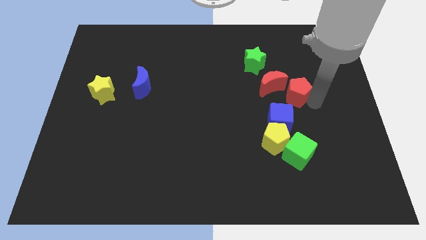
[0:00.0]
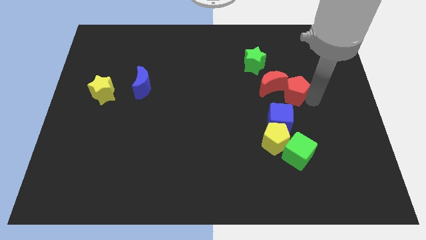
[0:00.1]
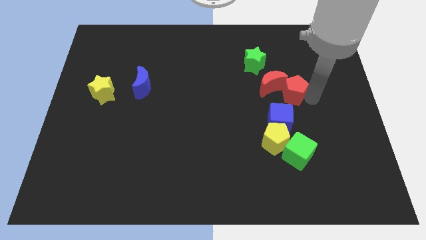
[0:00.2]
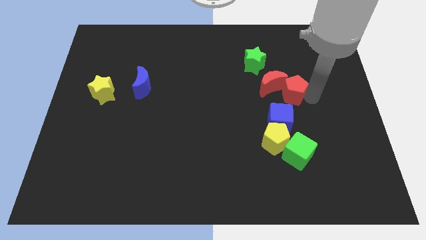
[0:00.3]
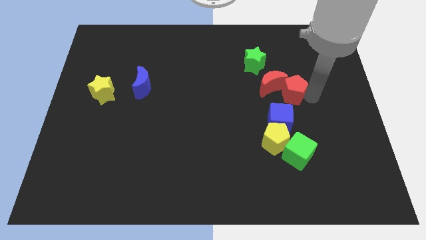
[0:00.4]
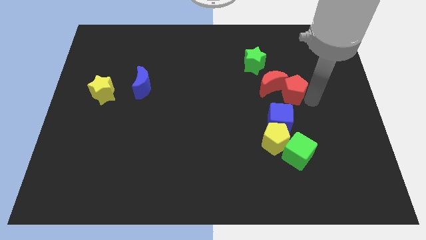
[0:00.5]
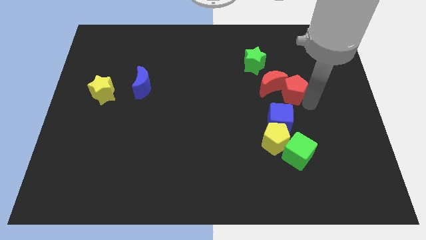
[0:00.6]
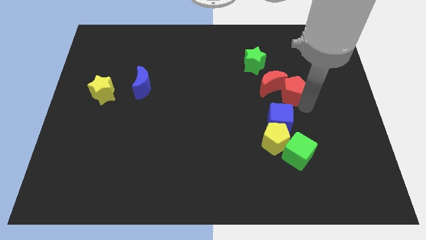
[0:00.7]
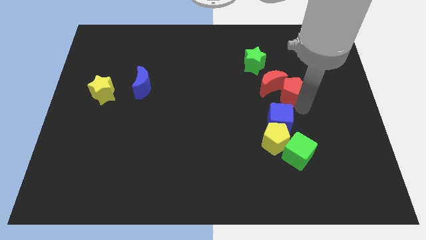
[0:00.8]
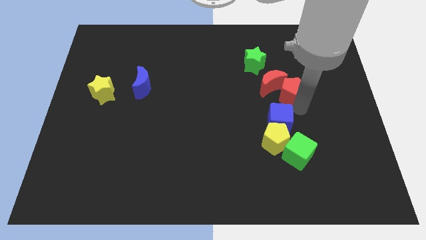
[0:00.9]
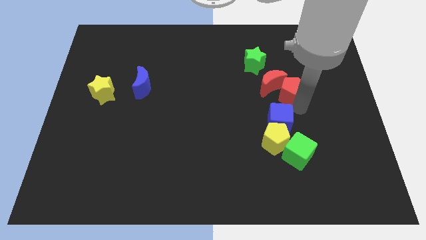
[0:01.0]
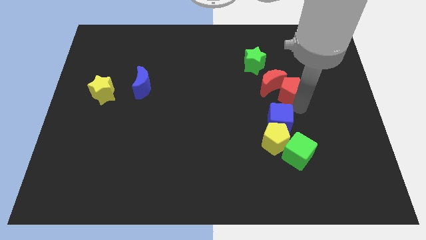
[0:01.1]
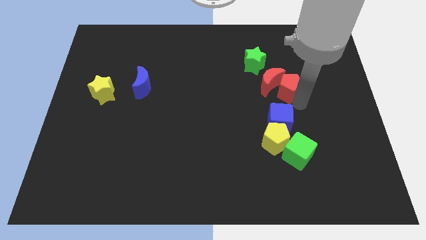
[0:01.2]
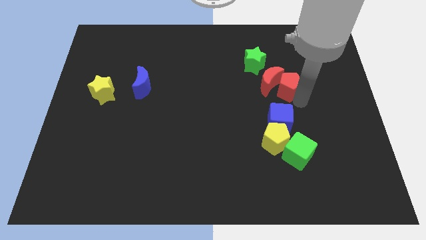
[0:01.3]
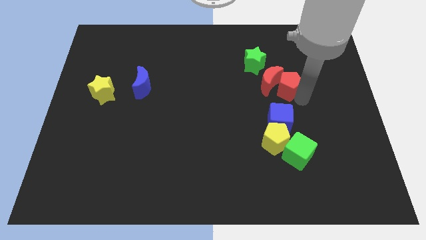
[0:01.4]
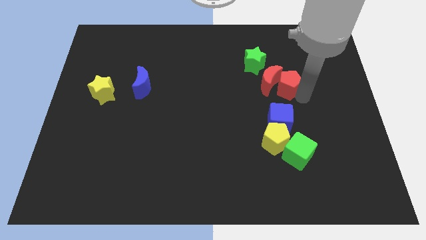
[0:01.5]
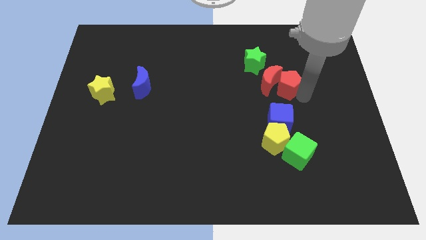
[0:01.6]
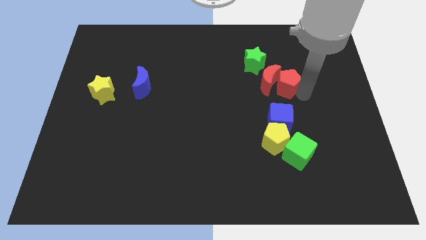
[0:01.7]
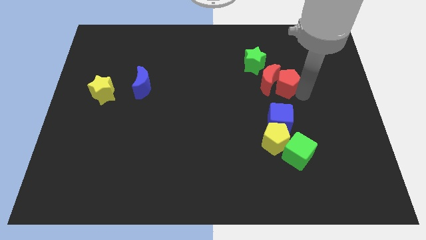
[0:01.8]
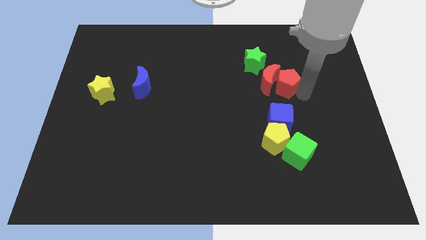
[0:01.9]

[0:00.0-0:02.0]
move the red pentagon into the red crescent

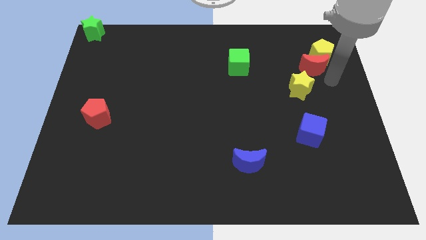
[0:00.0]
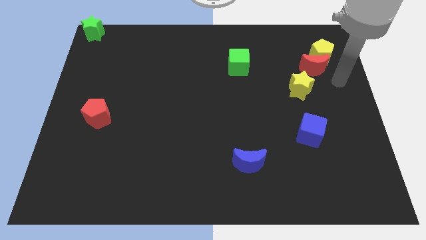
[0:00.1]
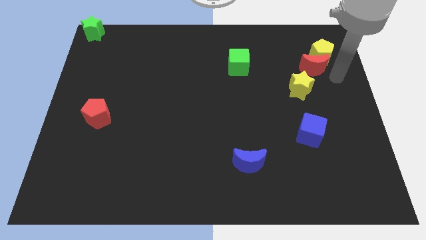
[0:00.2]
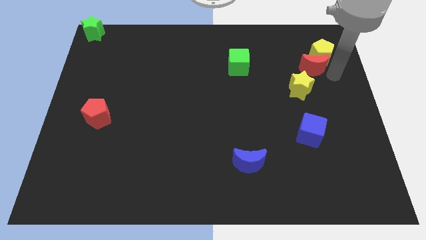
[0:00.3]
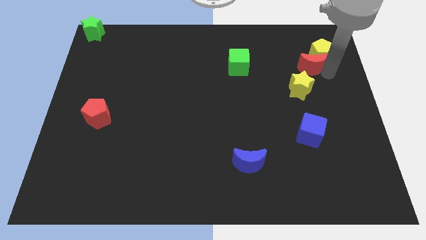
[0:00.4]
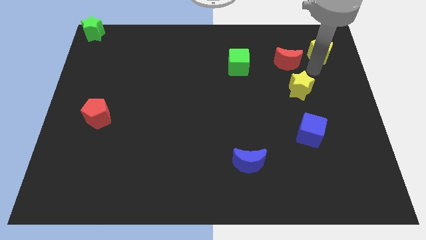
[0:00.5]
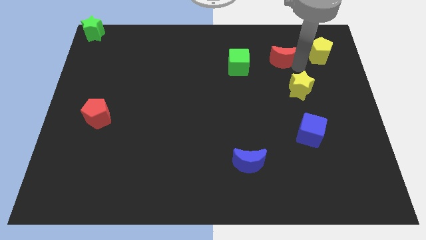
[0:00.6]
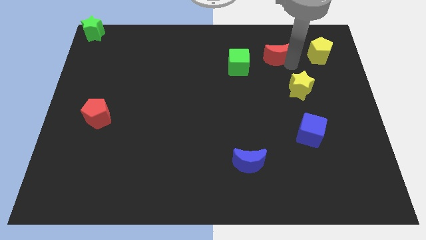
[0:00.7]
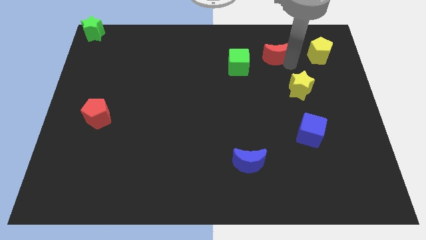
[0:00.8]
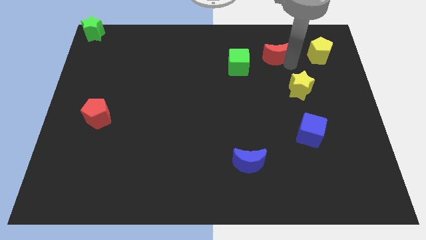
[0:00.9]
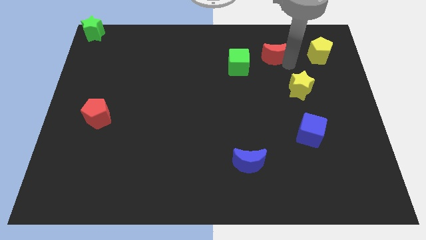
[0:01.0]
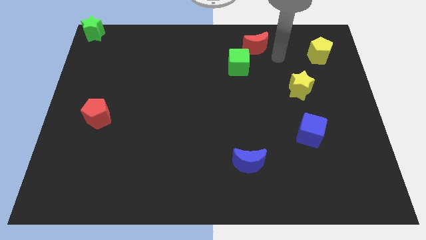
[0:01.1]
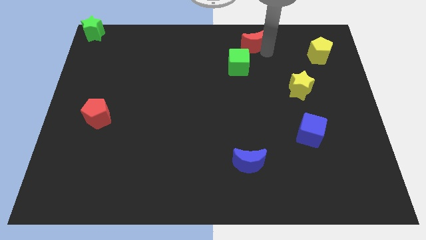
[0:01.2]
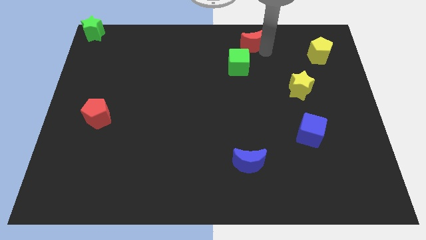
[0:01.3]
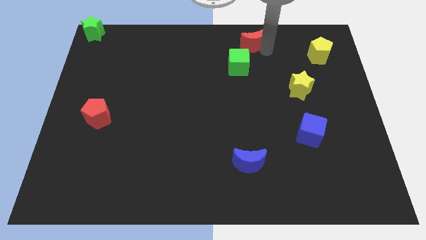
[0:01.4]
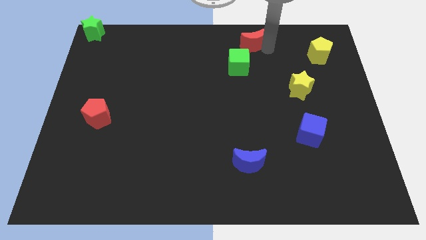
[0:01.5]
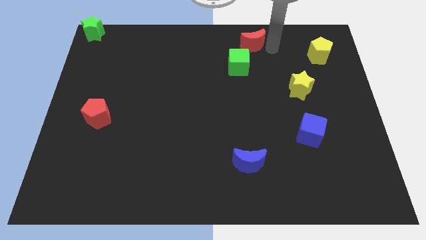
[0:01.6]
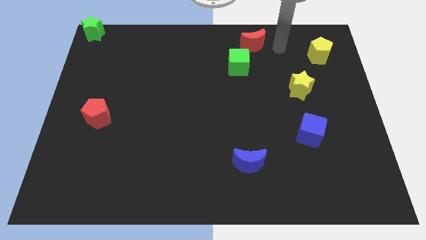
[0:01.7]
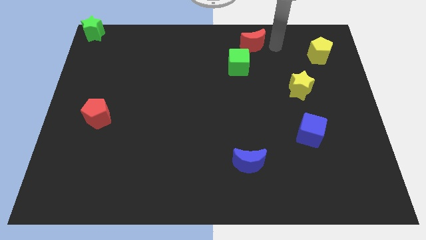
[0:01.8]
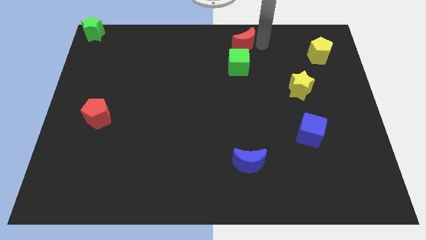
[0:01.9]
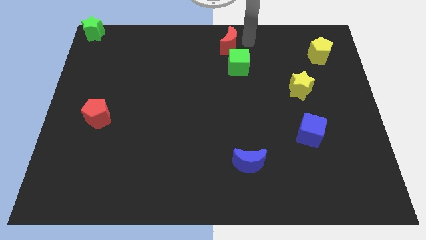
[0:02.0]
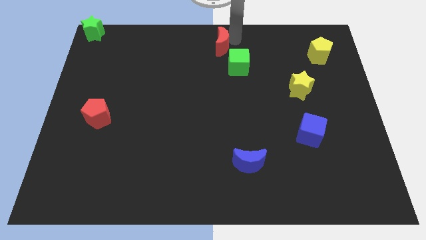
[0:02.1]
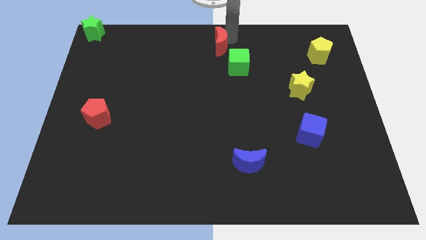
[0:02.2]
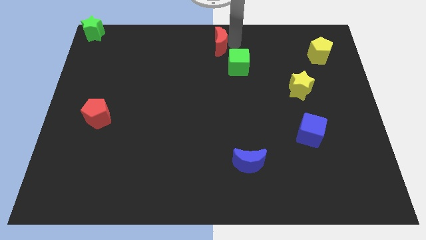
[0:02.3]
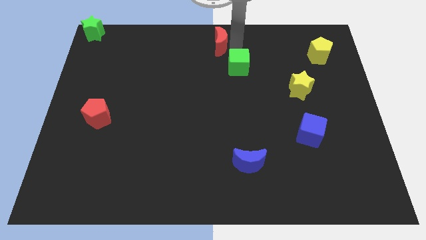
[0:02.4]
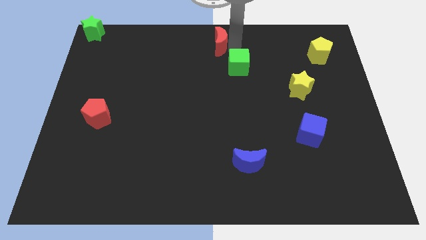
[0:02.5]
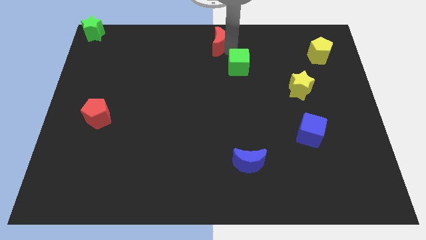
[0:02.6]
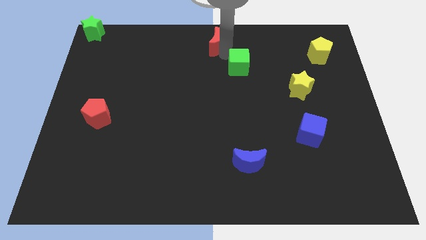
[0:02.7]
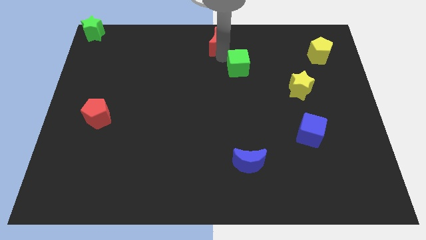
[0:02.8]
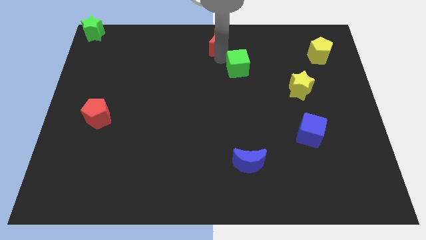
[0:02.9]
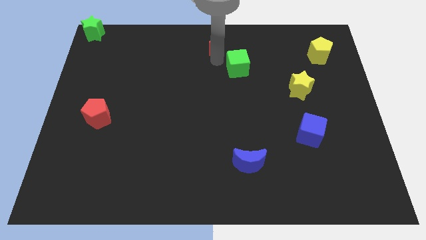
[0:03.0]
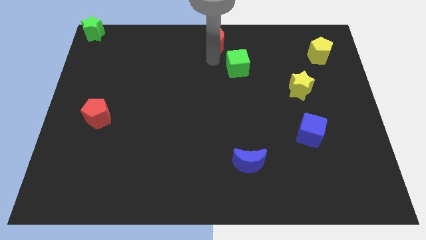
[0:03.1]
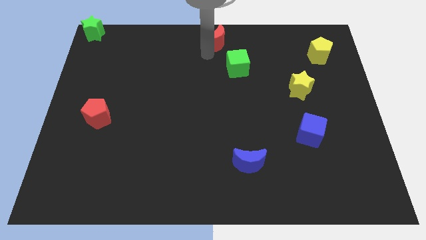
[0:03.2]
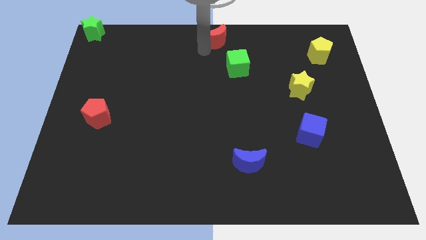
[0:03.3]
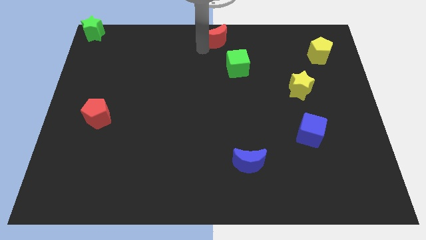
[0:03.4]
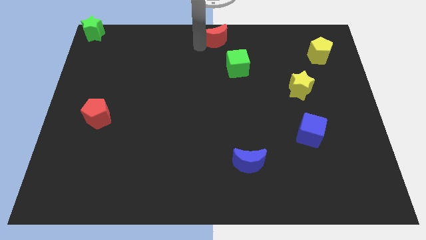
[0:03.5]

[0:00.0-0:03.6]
separate the red moon from the yellow blocks

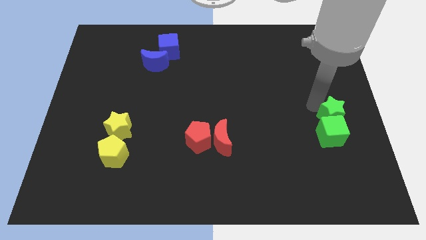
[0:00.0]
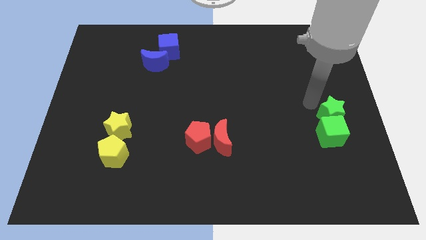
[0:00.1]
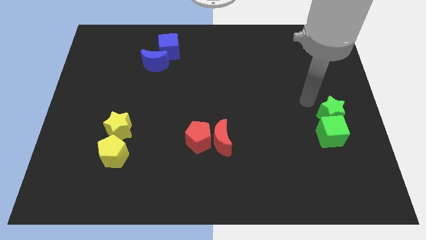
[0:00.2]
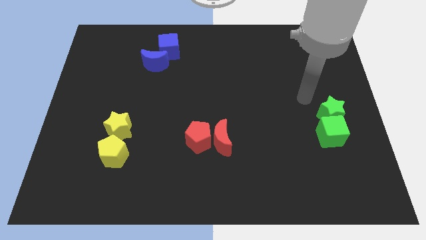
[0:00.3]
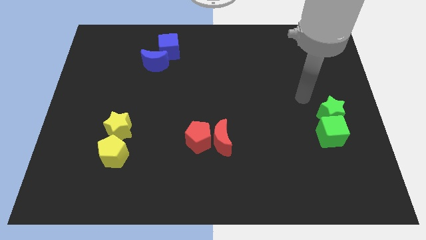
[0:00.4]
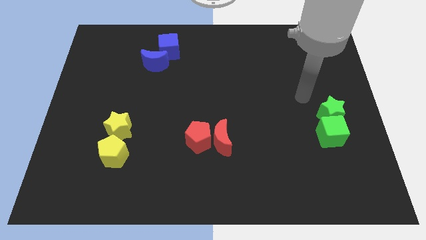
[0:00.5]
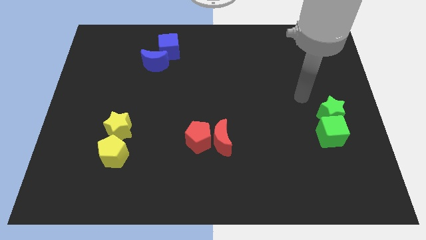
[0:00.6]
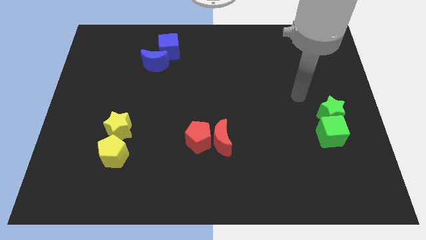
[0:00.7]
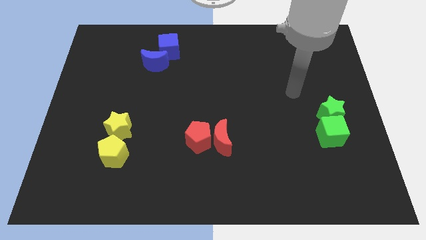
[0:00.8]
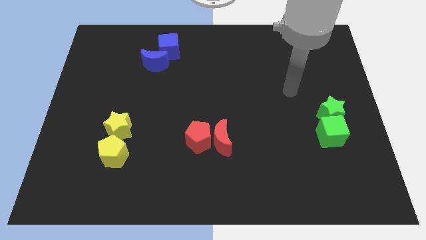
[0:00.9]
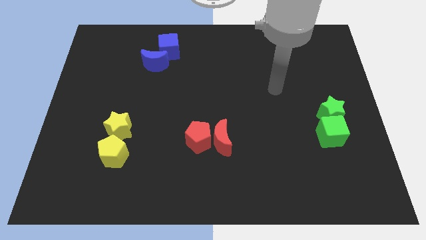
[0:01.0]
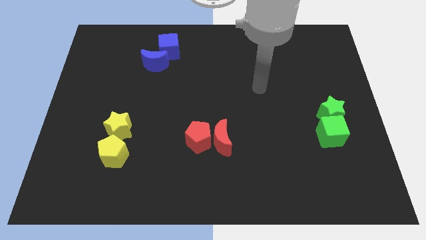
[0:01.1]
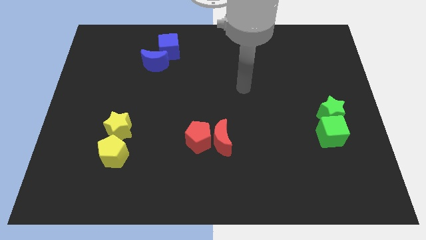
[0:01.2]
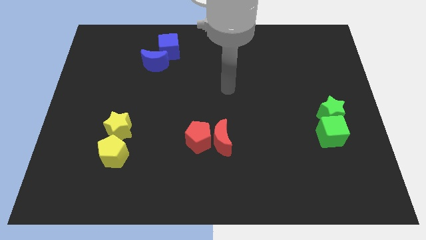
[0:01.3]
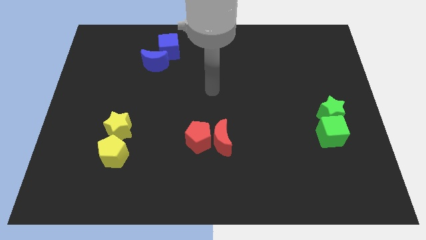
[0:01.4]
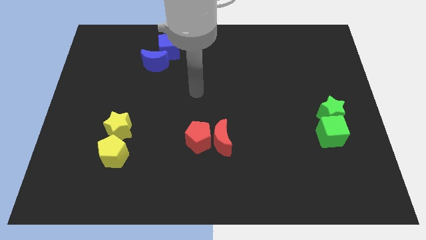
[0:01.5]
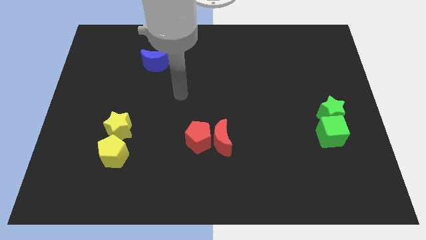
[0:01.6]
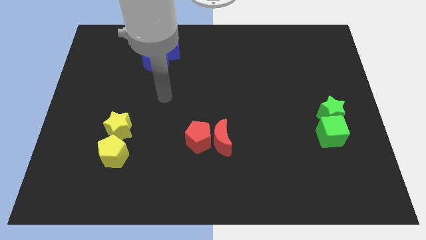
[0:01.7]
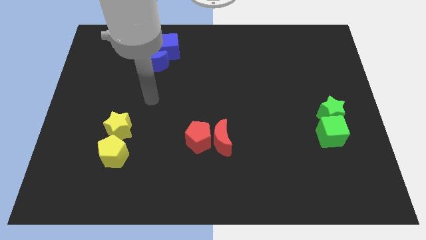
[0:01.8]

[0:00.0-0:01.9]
move your arm towards the left side of the board

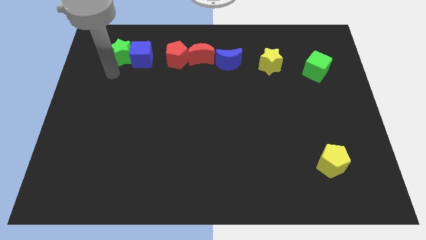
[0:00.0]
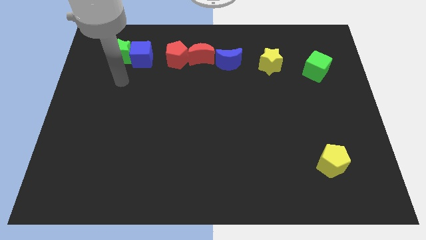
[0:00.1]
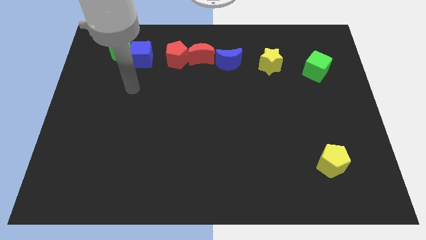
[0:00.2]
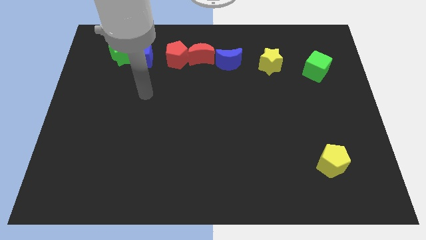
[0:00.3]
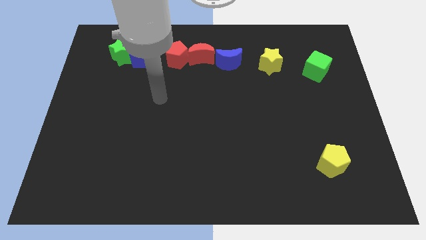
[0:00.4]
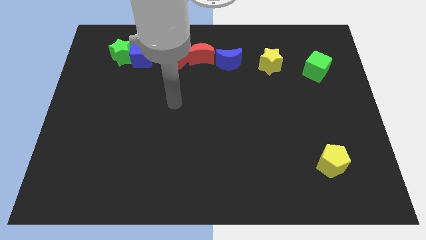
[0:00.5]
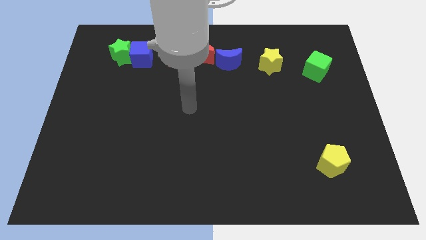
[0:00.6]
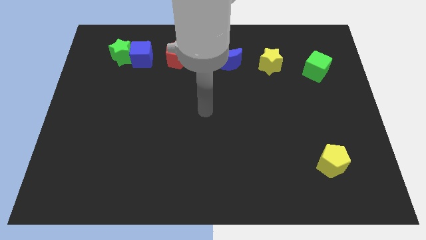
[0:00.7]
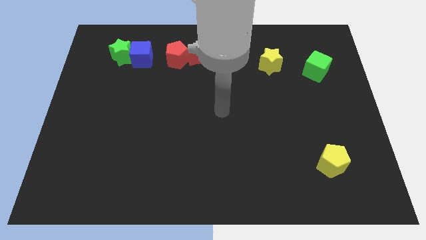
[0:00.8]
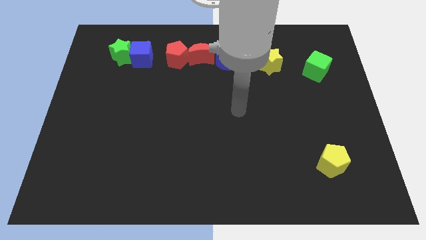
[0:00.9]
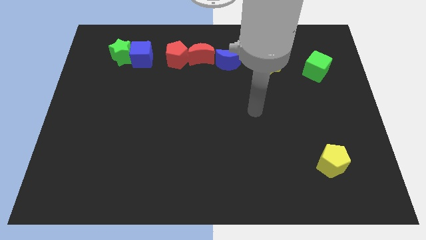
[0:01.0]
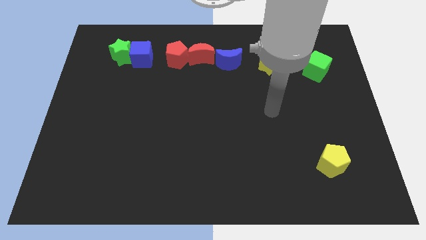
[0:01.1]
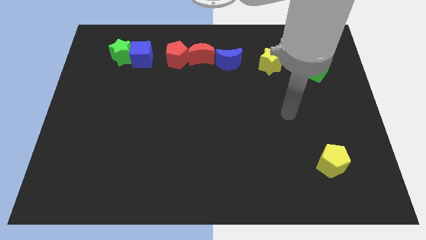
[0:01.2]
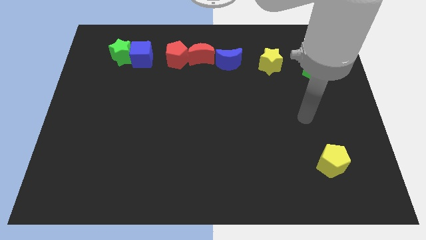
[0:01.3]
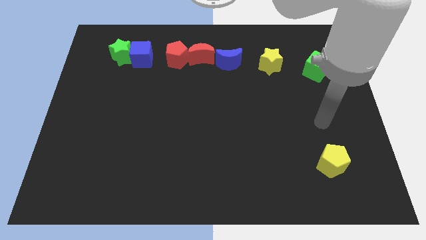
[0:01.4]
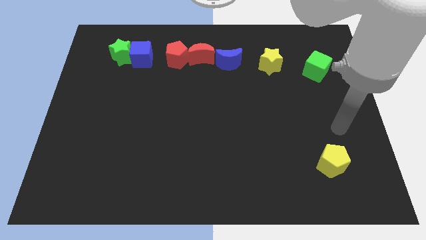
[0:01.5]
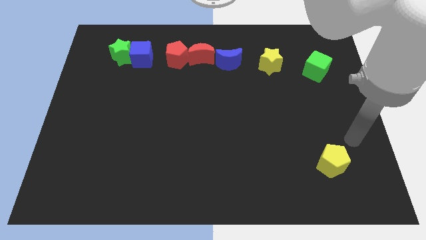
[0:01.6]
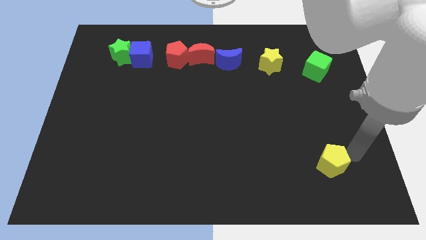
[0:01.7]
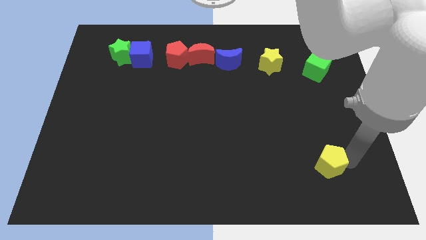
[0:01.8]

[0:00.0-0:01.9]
move the arm towards the yellow pentagon
